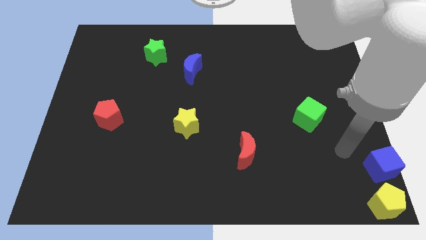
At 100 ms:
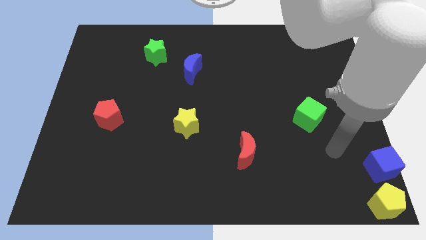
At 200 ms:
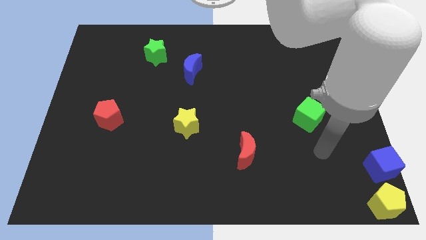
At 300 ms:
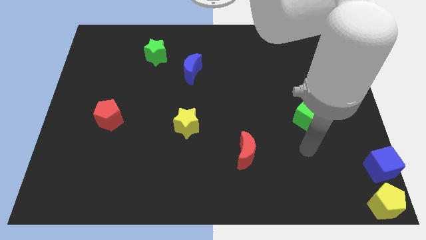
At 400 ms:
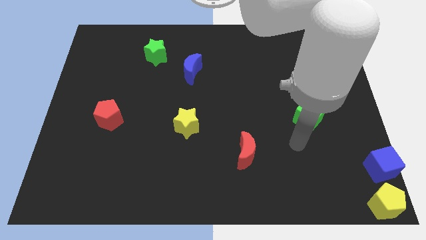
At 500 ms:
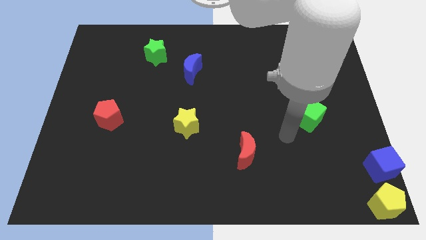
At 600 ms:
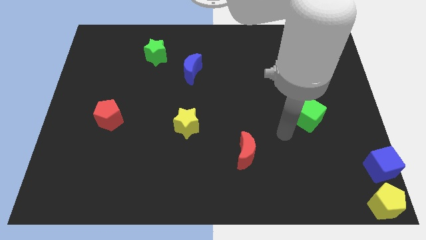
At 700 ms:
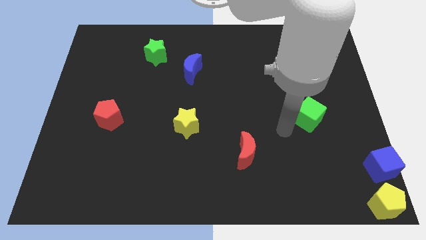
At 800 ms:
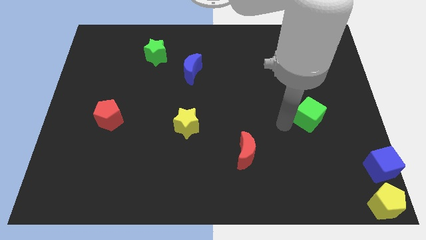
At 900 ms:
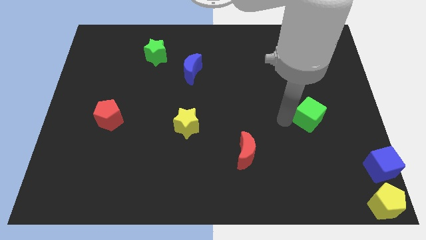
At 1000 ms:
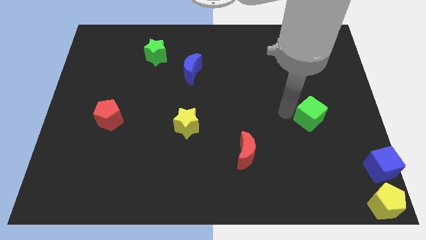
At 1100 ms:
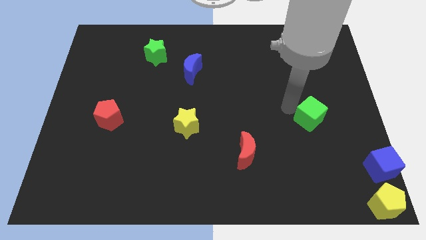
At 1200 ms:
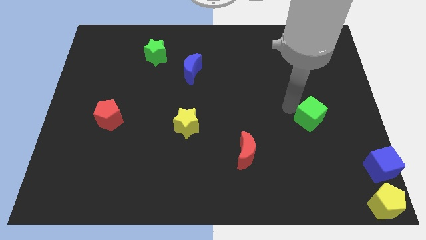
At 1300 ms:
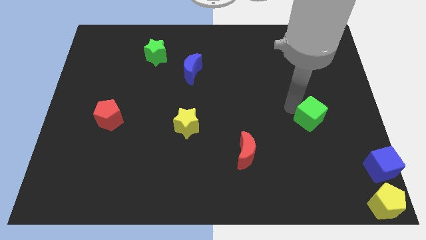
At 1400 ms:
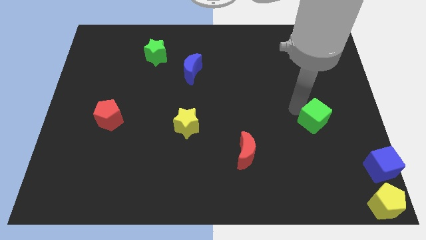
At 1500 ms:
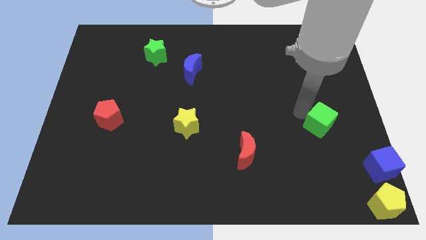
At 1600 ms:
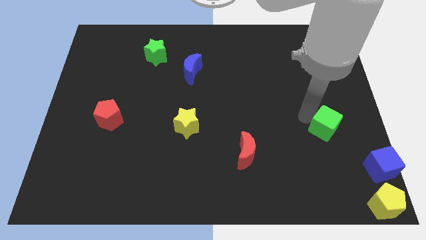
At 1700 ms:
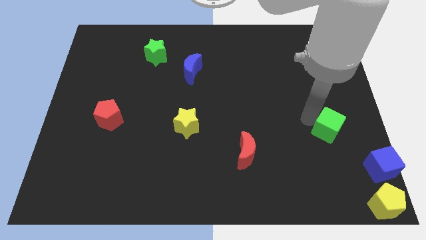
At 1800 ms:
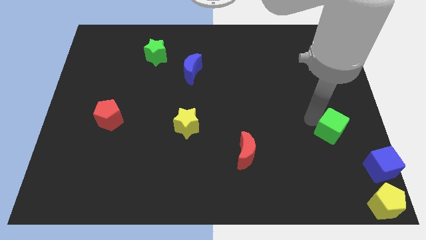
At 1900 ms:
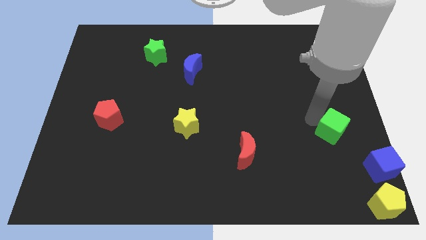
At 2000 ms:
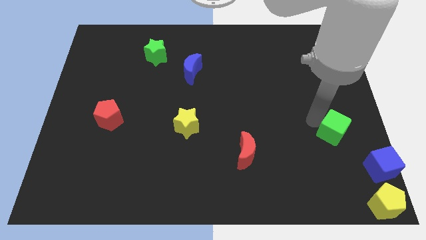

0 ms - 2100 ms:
move away from the blue cube

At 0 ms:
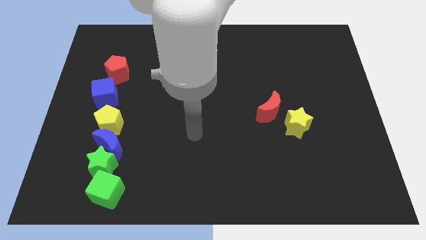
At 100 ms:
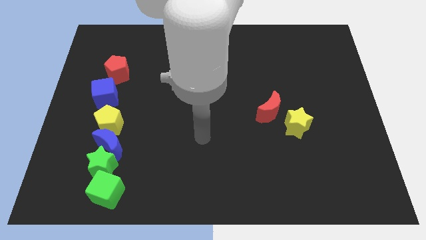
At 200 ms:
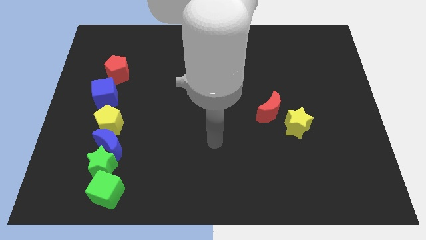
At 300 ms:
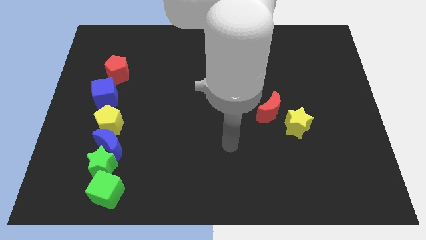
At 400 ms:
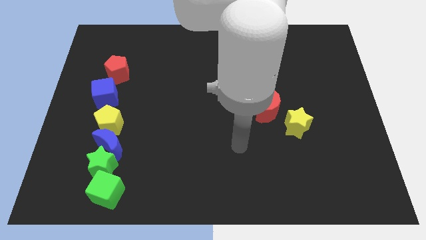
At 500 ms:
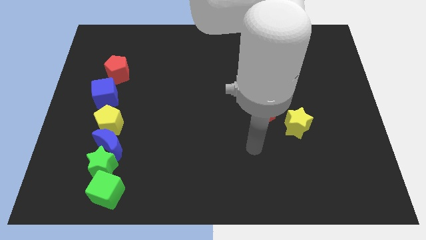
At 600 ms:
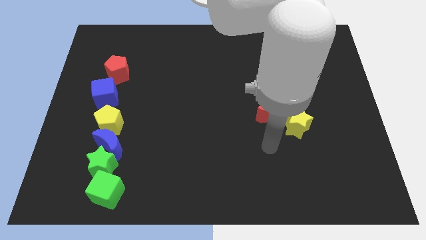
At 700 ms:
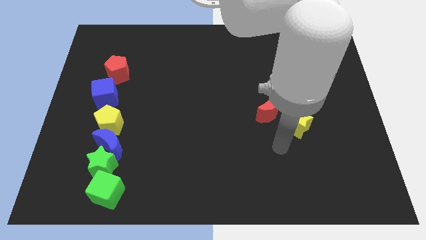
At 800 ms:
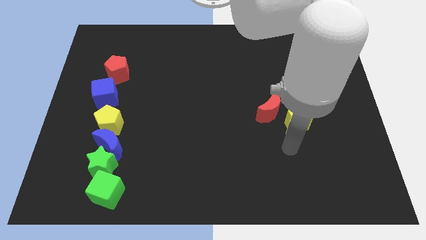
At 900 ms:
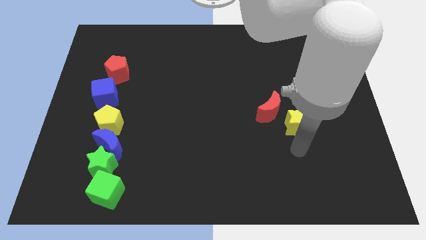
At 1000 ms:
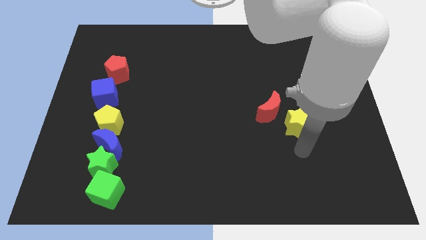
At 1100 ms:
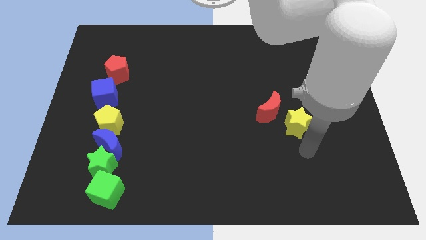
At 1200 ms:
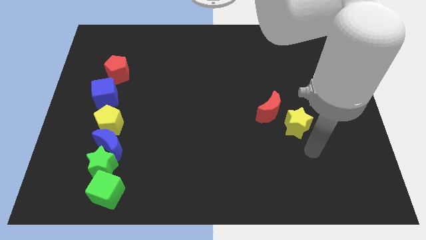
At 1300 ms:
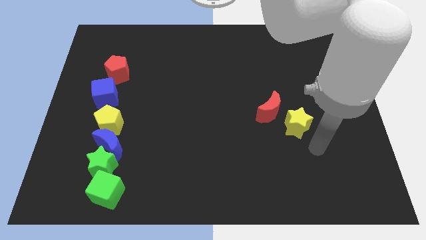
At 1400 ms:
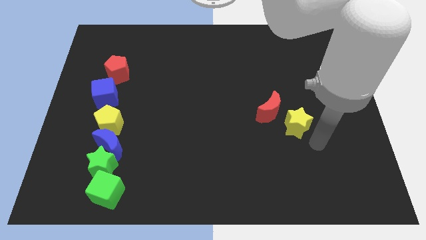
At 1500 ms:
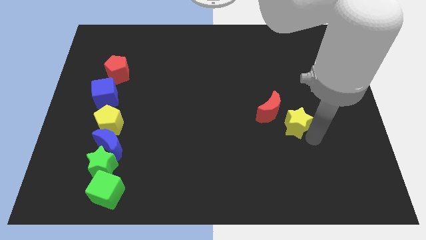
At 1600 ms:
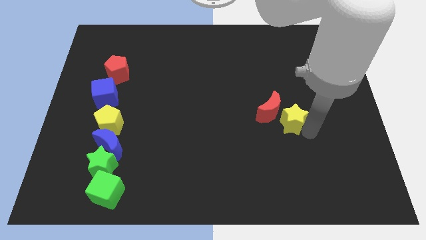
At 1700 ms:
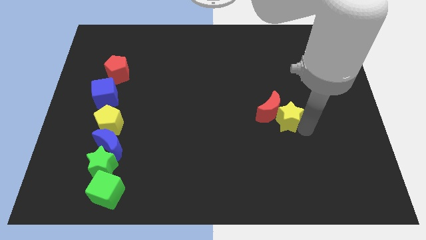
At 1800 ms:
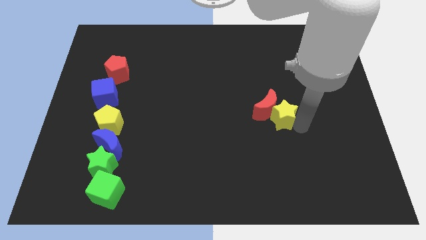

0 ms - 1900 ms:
slightly push the yellow star towards the red moon

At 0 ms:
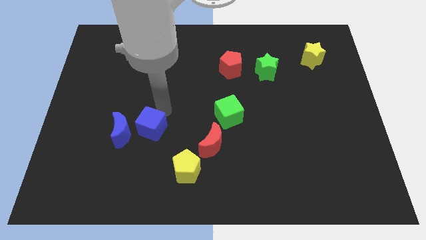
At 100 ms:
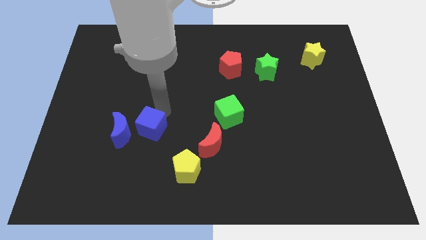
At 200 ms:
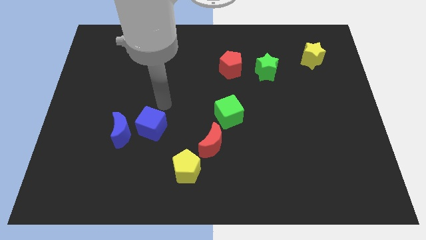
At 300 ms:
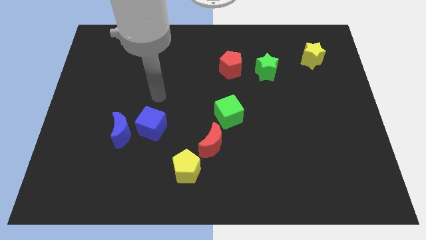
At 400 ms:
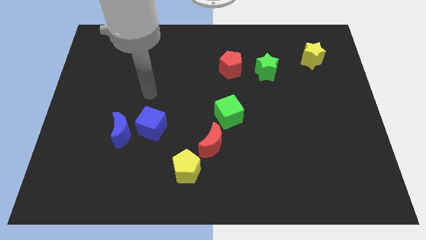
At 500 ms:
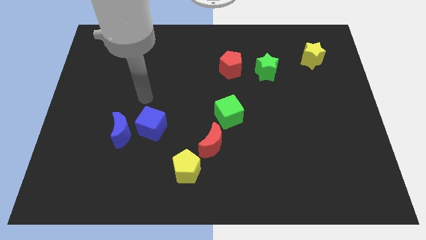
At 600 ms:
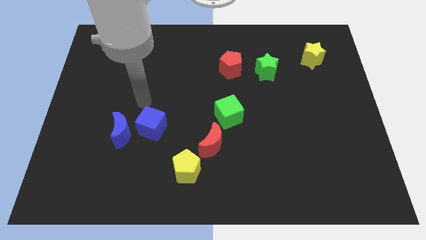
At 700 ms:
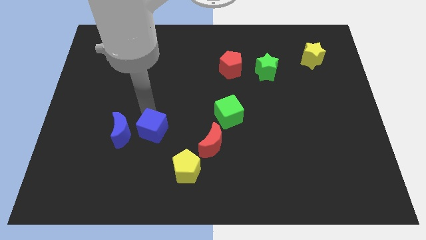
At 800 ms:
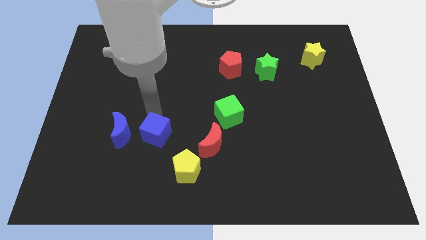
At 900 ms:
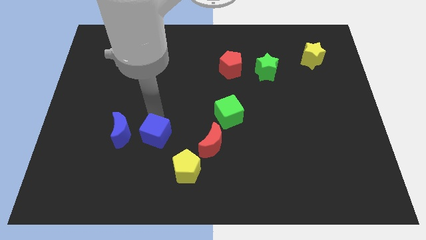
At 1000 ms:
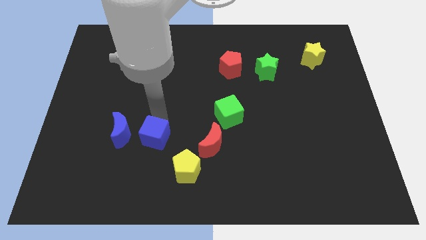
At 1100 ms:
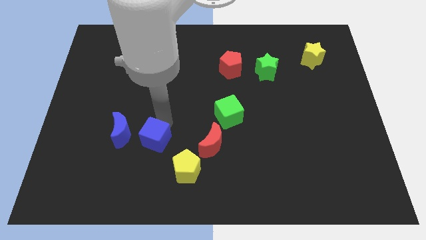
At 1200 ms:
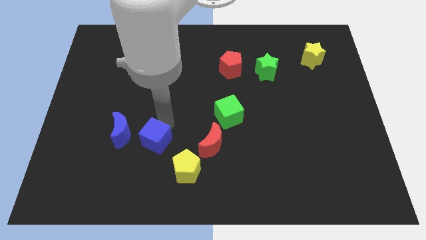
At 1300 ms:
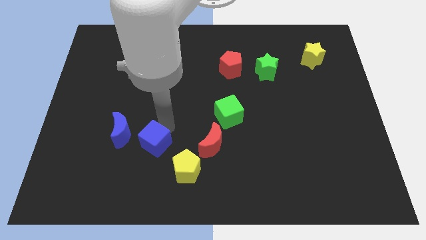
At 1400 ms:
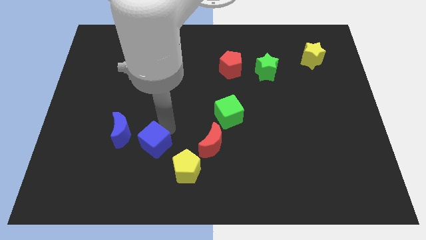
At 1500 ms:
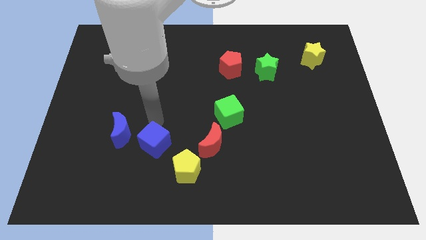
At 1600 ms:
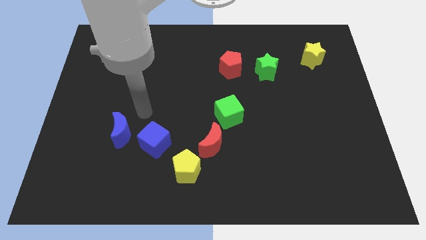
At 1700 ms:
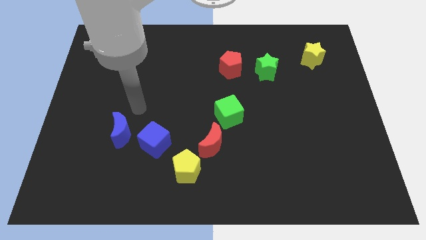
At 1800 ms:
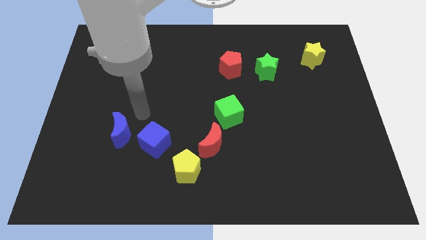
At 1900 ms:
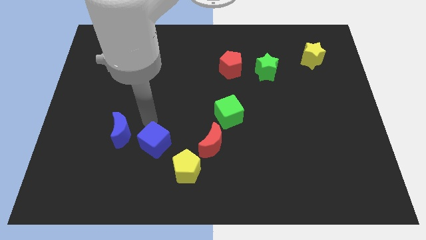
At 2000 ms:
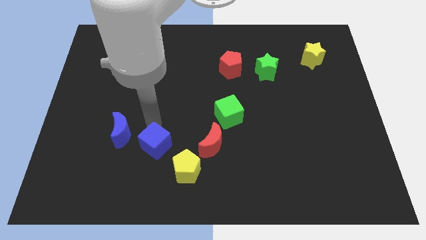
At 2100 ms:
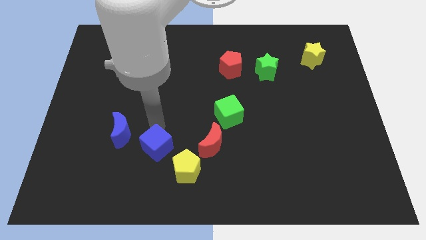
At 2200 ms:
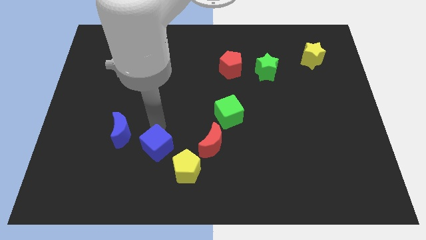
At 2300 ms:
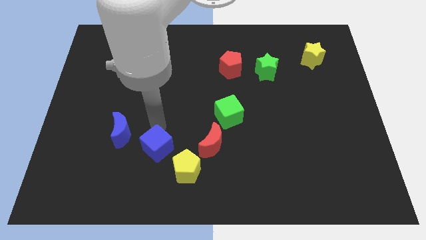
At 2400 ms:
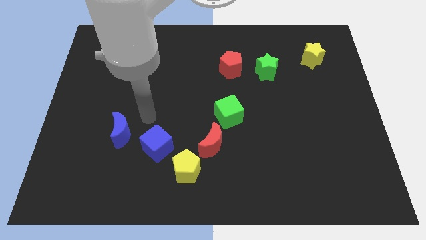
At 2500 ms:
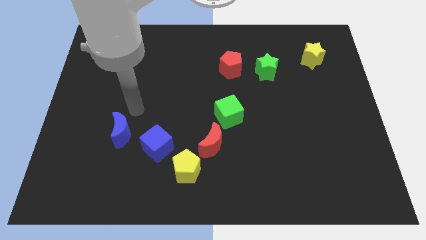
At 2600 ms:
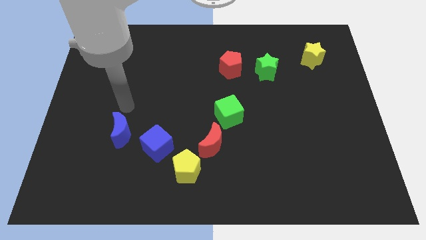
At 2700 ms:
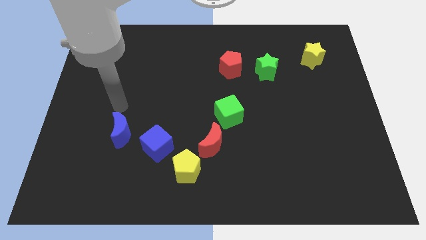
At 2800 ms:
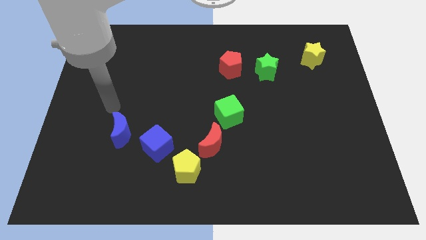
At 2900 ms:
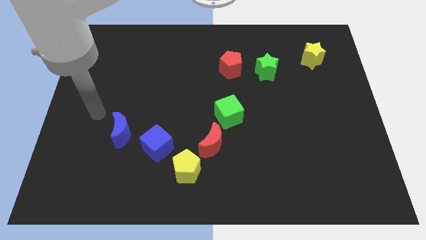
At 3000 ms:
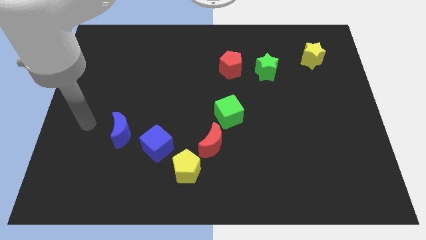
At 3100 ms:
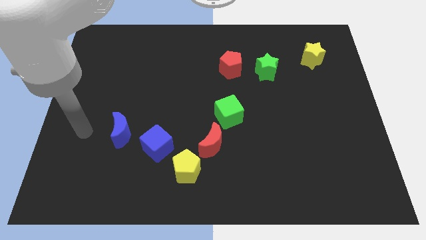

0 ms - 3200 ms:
move the blue cube downwards

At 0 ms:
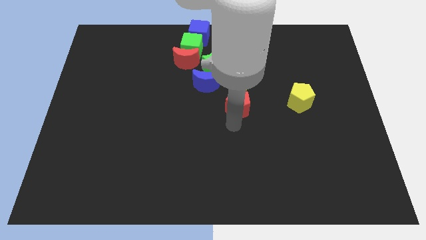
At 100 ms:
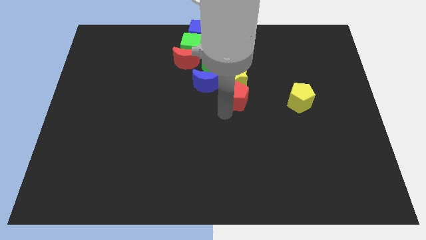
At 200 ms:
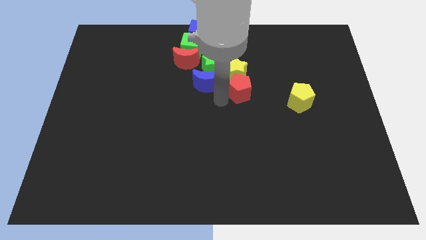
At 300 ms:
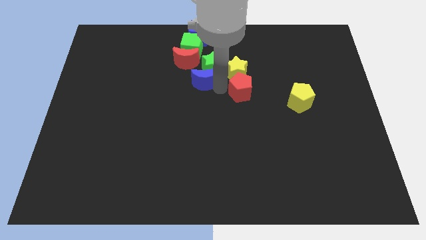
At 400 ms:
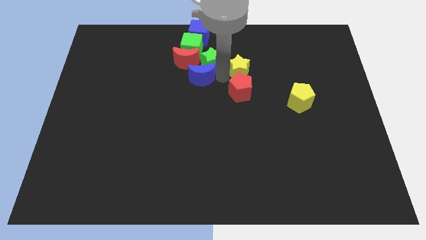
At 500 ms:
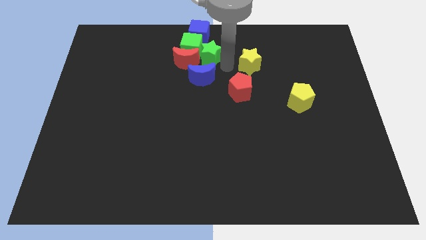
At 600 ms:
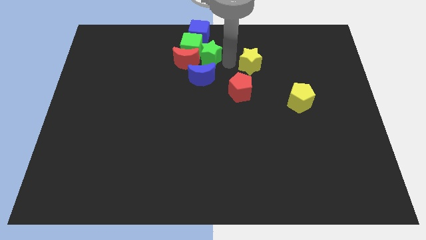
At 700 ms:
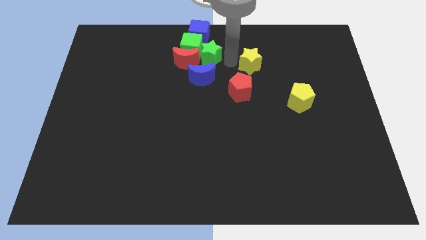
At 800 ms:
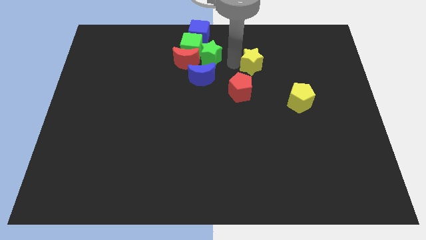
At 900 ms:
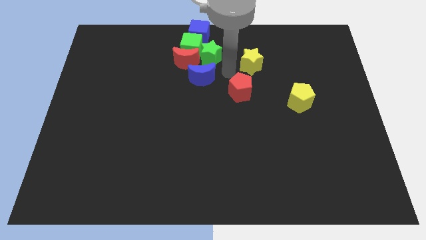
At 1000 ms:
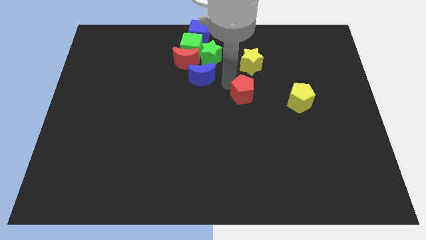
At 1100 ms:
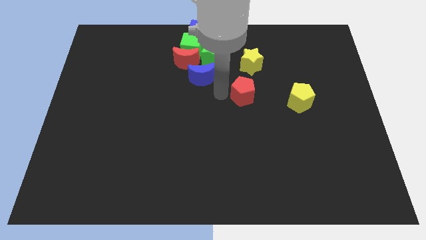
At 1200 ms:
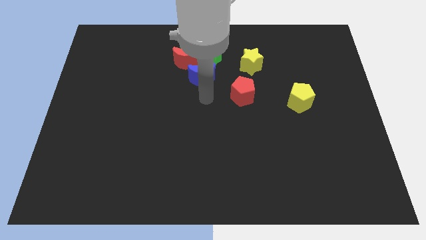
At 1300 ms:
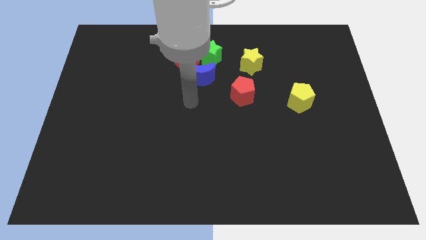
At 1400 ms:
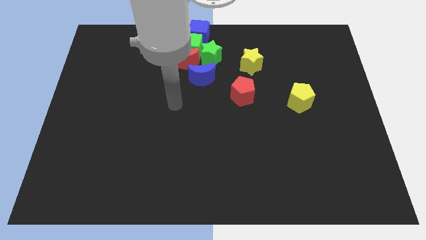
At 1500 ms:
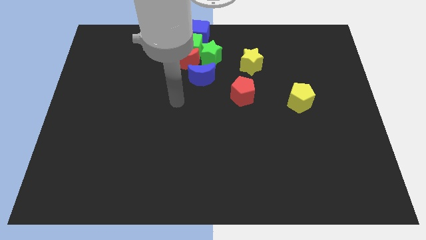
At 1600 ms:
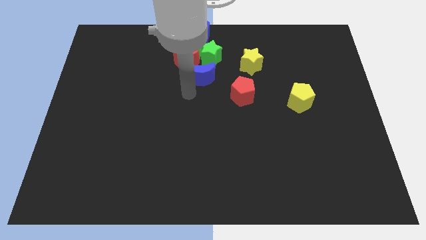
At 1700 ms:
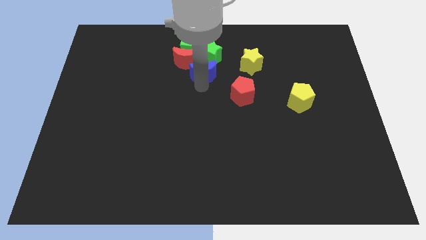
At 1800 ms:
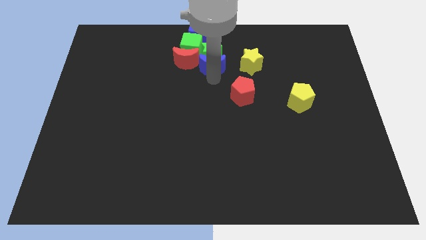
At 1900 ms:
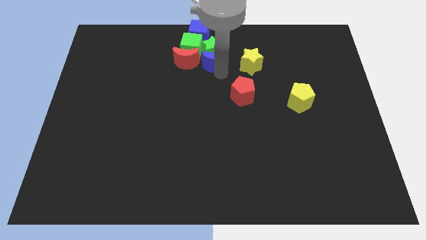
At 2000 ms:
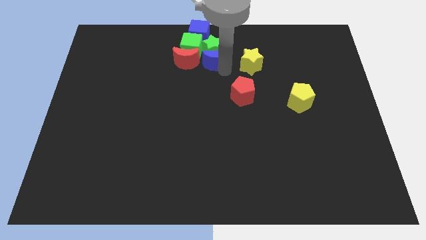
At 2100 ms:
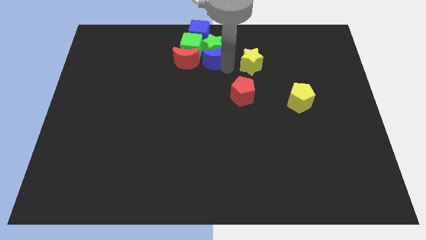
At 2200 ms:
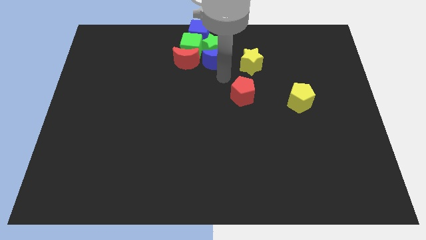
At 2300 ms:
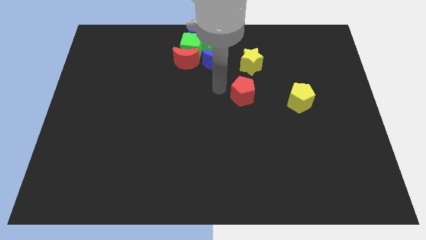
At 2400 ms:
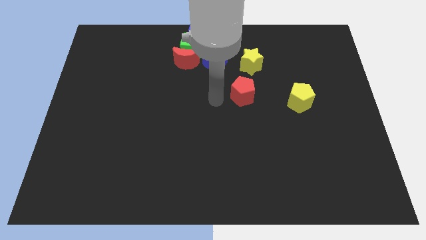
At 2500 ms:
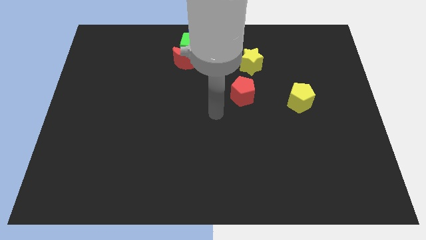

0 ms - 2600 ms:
push the red pentagon and push the blue moon and green star into the group of blocks
